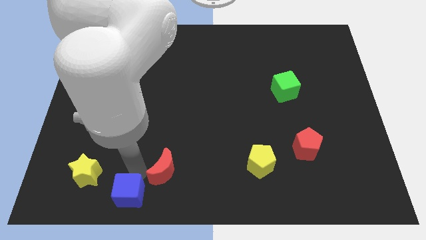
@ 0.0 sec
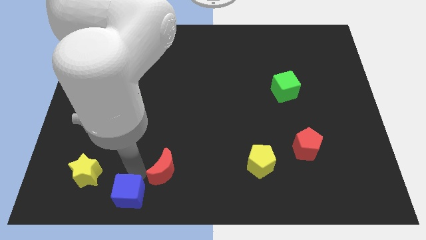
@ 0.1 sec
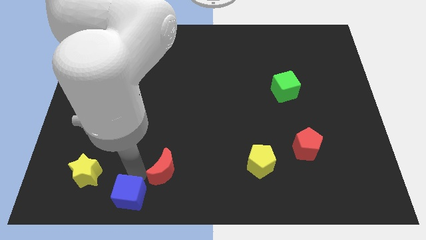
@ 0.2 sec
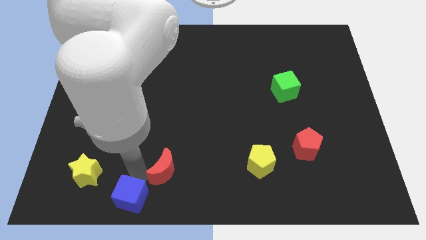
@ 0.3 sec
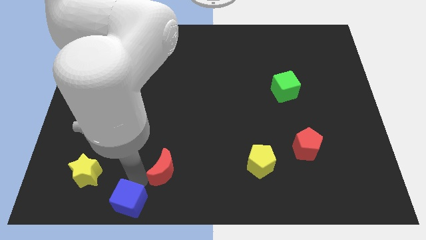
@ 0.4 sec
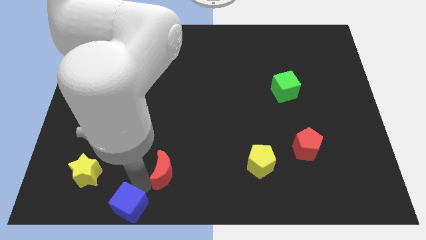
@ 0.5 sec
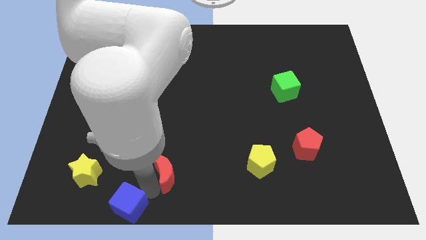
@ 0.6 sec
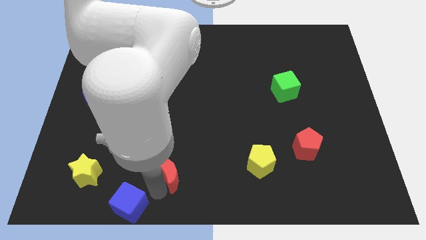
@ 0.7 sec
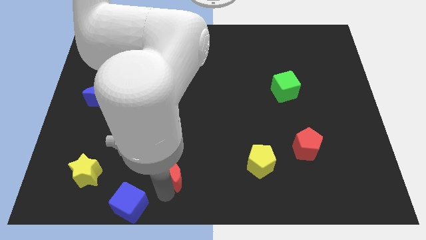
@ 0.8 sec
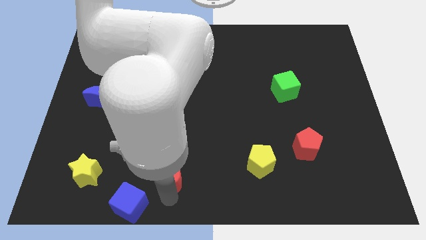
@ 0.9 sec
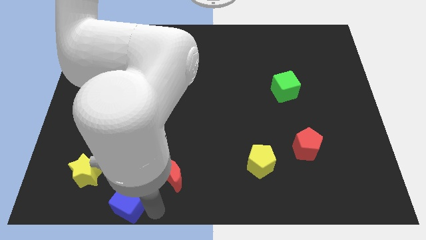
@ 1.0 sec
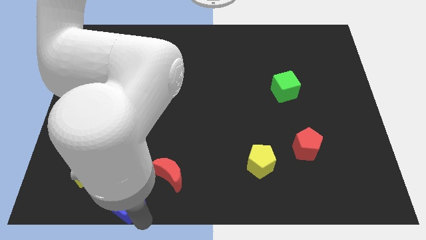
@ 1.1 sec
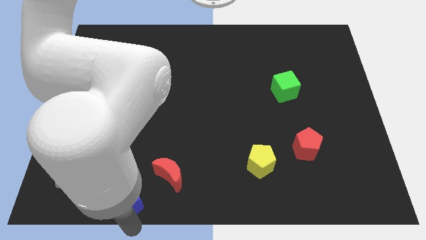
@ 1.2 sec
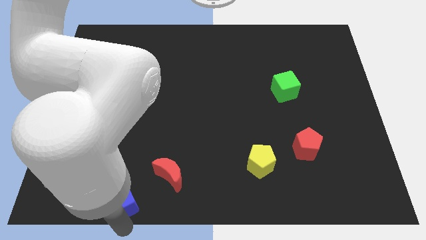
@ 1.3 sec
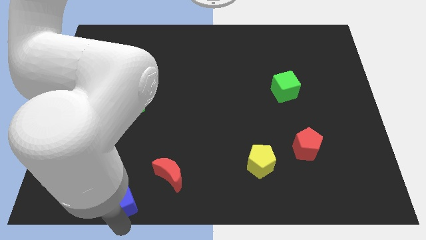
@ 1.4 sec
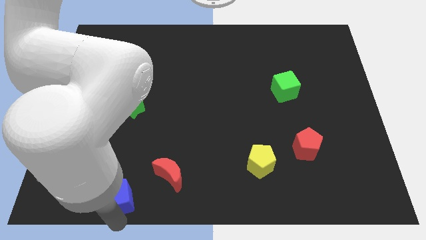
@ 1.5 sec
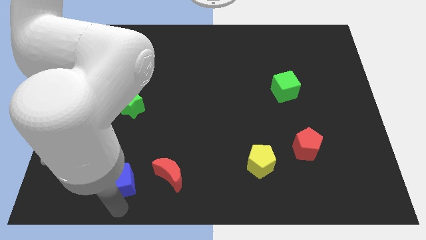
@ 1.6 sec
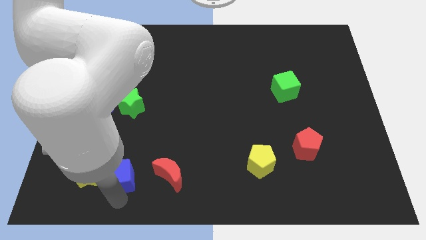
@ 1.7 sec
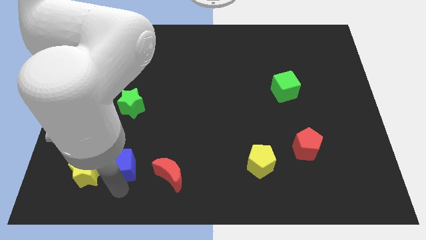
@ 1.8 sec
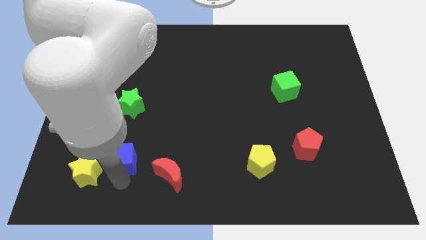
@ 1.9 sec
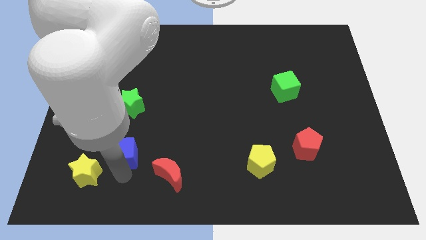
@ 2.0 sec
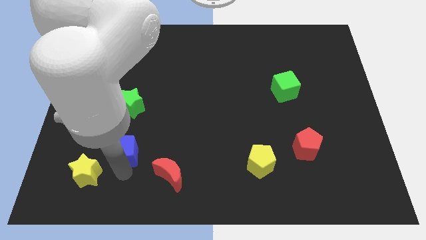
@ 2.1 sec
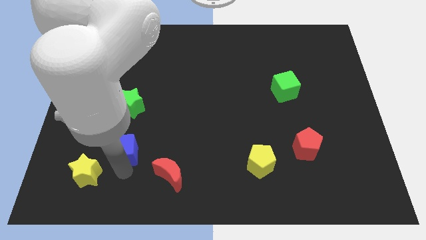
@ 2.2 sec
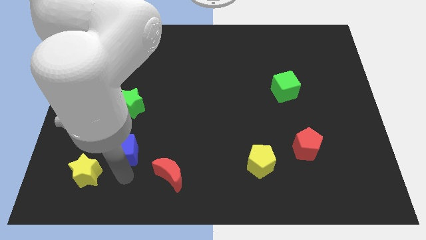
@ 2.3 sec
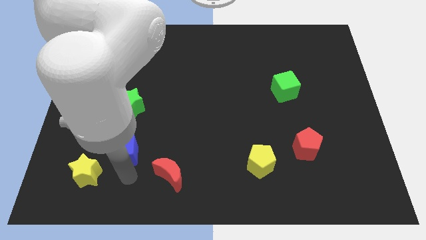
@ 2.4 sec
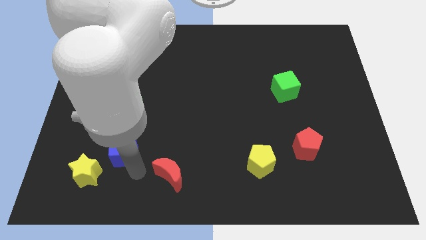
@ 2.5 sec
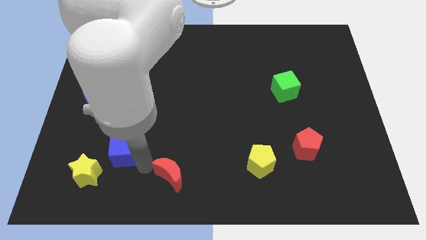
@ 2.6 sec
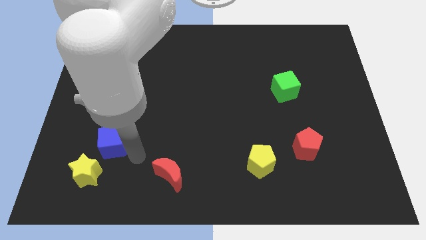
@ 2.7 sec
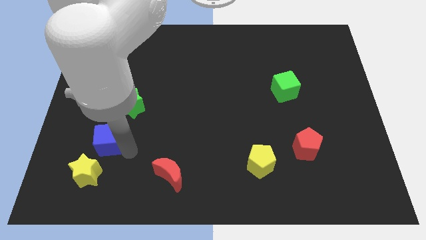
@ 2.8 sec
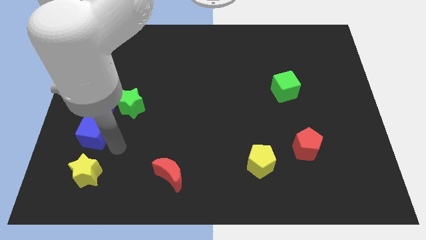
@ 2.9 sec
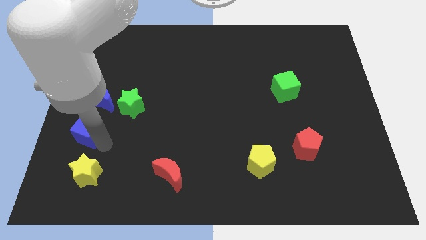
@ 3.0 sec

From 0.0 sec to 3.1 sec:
push blue cube above yellow star

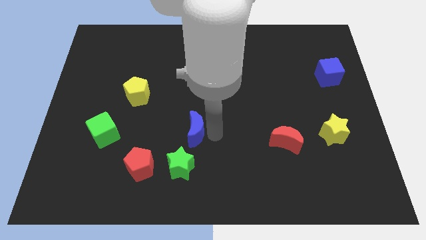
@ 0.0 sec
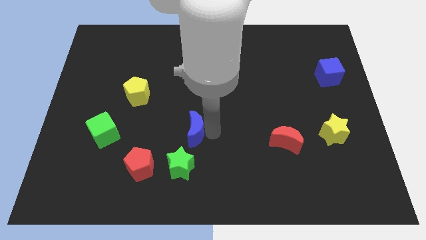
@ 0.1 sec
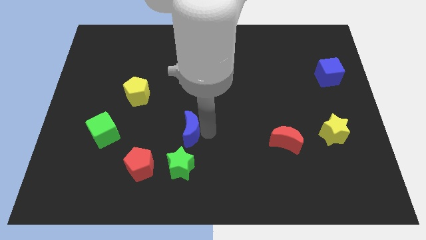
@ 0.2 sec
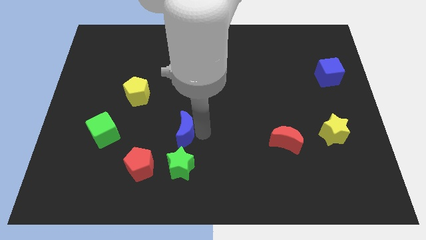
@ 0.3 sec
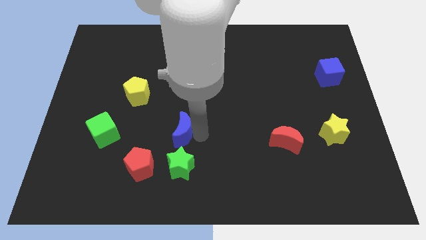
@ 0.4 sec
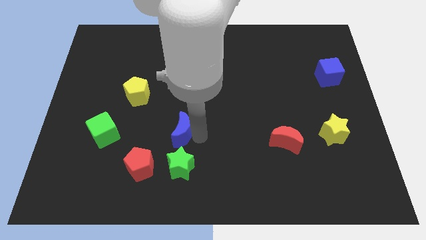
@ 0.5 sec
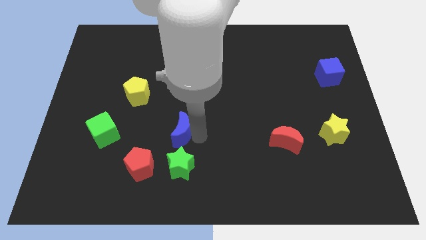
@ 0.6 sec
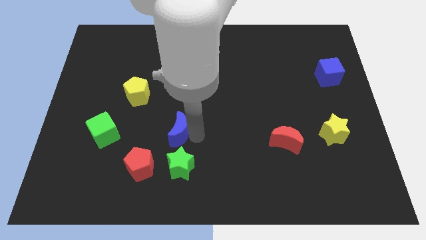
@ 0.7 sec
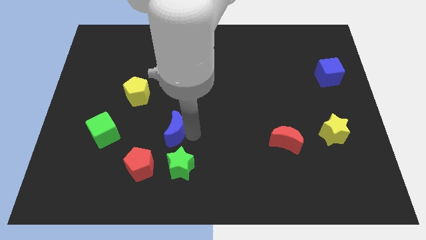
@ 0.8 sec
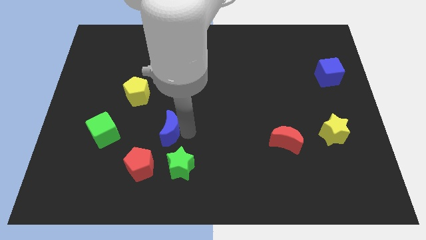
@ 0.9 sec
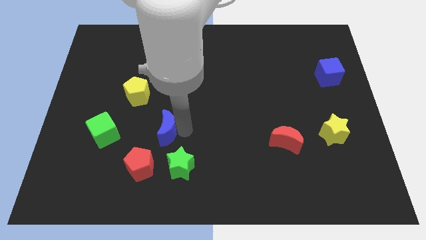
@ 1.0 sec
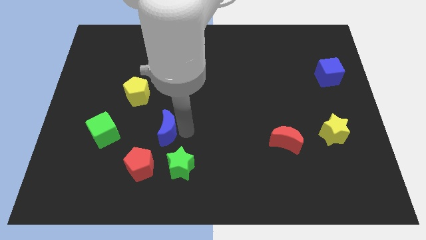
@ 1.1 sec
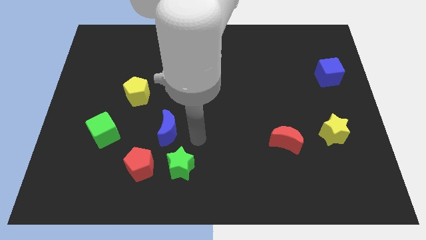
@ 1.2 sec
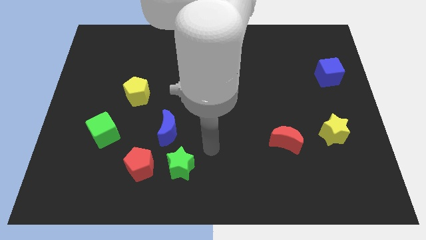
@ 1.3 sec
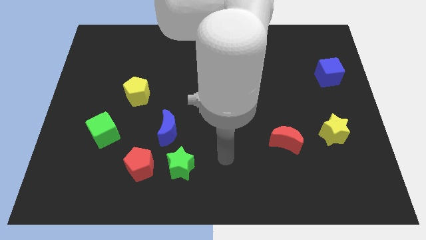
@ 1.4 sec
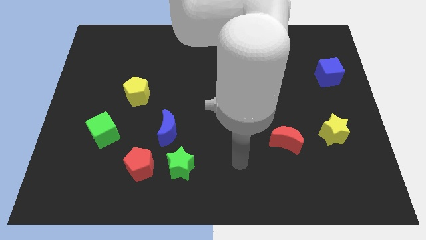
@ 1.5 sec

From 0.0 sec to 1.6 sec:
push the blue crescent to the left to form a triangle

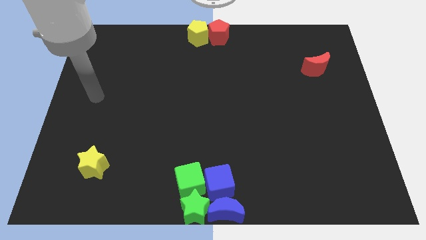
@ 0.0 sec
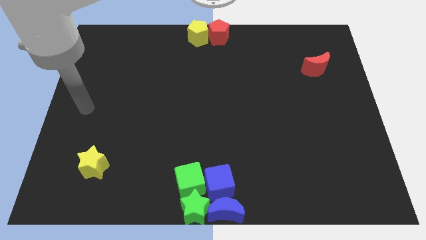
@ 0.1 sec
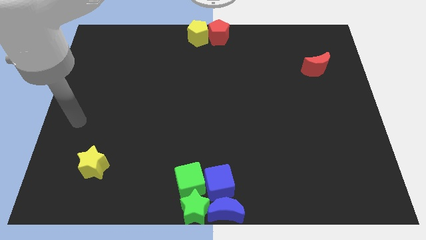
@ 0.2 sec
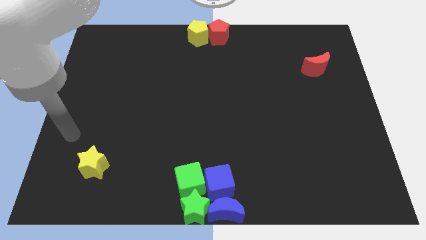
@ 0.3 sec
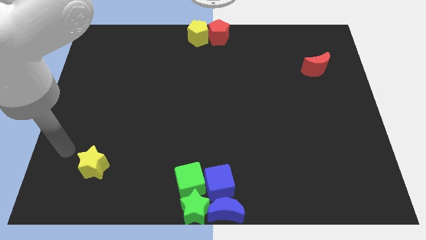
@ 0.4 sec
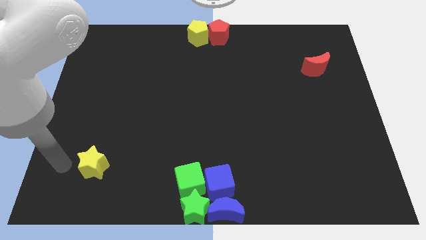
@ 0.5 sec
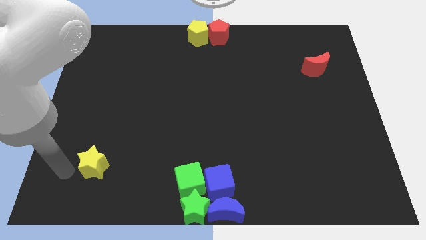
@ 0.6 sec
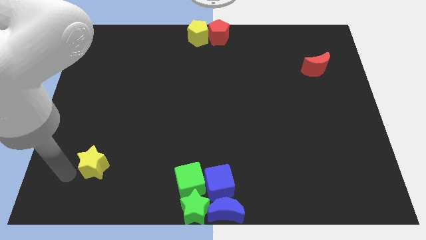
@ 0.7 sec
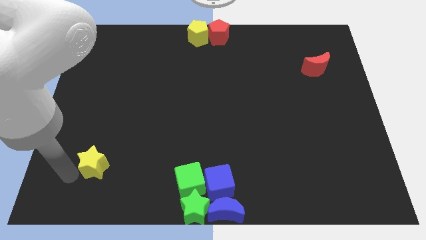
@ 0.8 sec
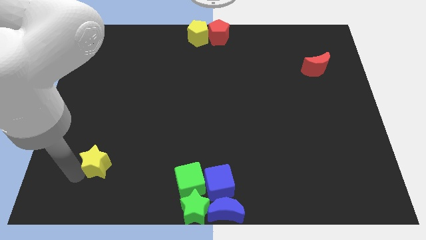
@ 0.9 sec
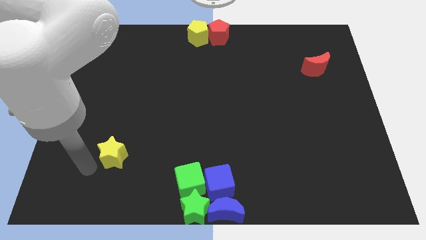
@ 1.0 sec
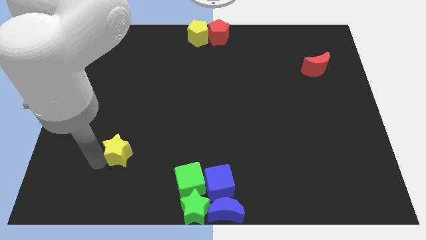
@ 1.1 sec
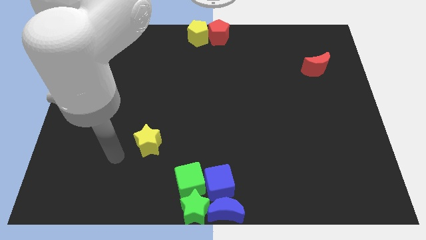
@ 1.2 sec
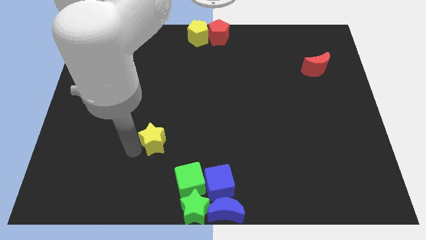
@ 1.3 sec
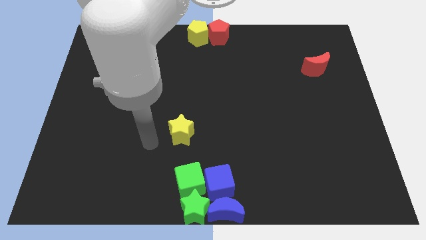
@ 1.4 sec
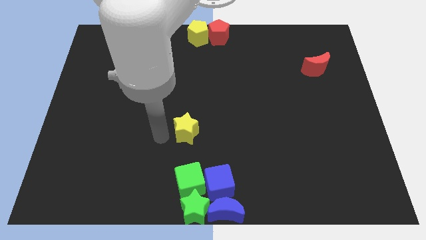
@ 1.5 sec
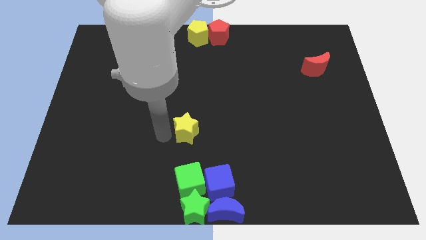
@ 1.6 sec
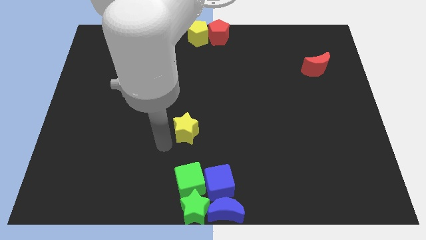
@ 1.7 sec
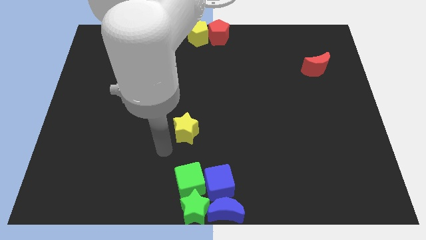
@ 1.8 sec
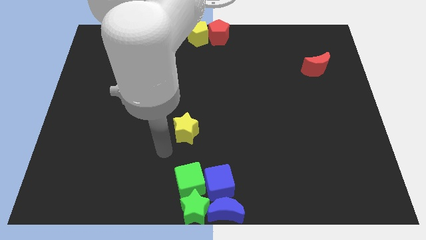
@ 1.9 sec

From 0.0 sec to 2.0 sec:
move the yellow star above the green blocks

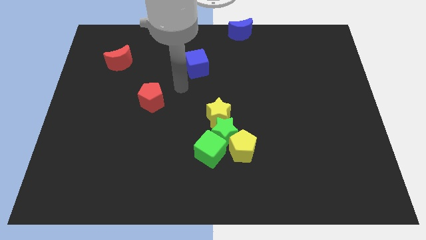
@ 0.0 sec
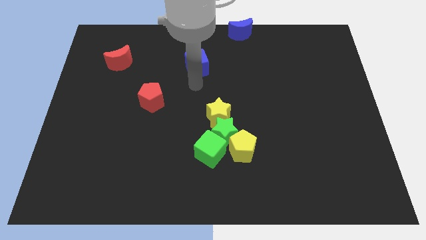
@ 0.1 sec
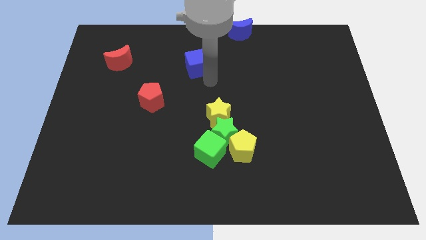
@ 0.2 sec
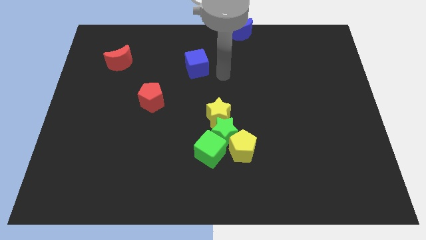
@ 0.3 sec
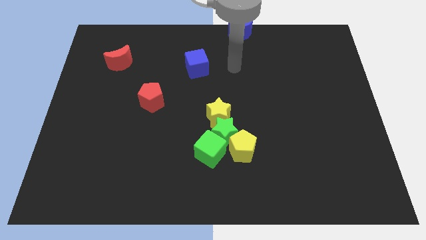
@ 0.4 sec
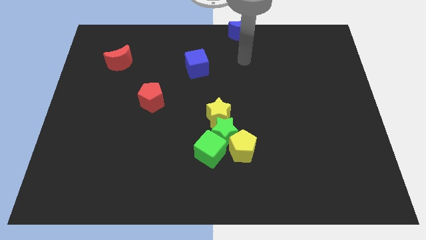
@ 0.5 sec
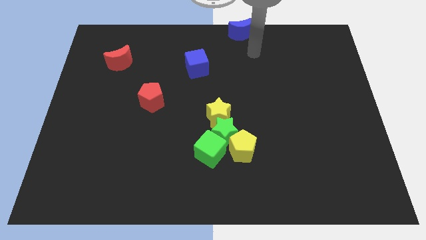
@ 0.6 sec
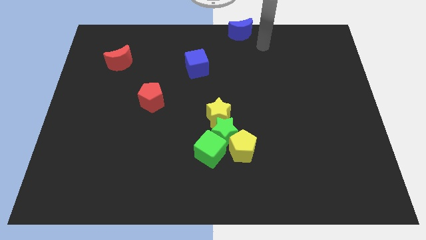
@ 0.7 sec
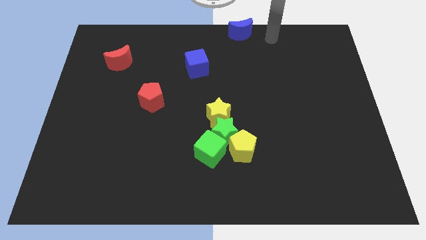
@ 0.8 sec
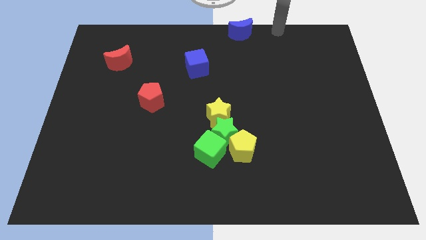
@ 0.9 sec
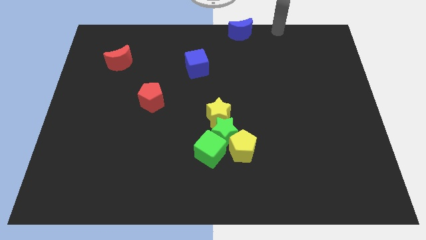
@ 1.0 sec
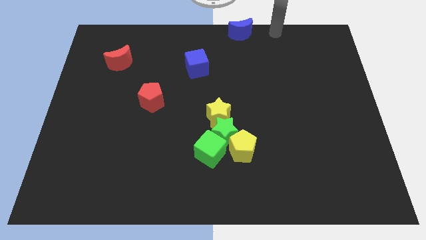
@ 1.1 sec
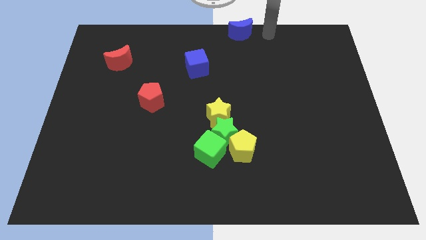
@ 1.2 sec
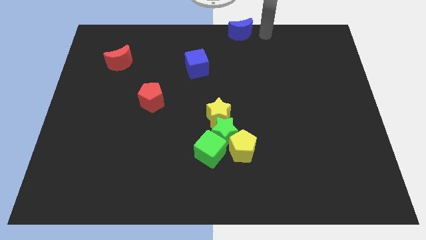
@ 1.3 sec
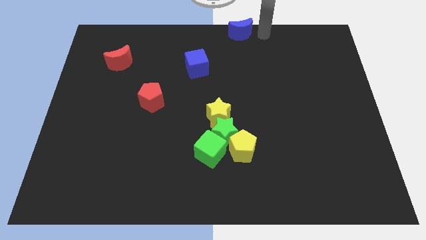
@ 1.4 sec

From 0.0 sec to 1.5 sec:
move your hand right to the blue crescent

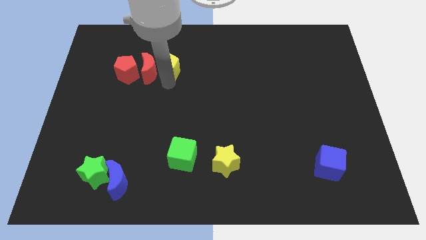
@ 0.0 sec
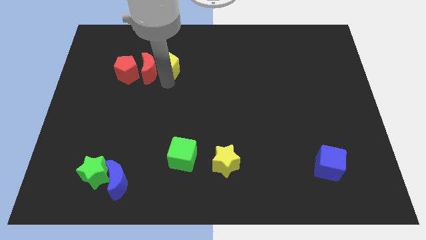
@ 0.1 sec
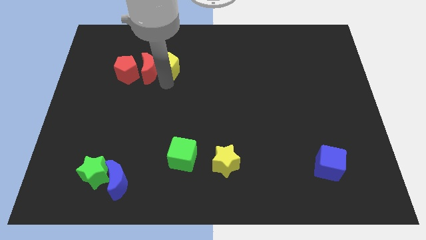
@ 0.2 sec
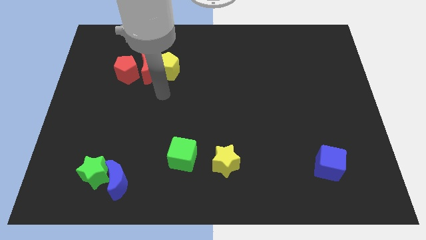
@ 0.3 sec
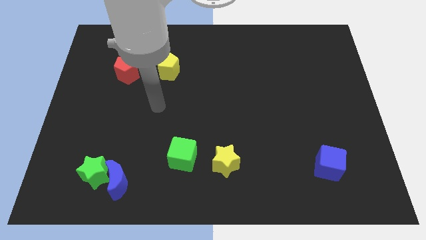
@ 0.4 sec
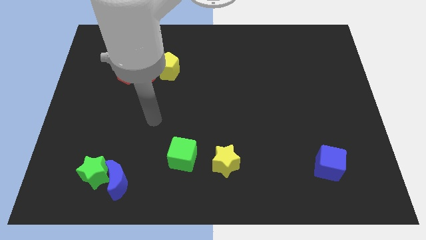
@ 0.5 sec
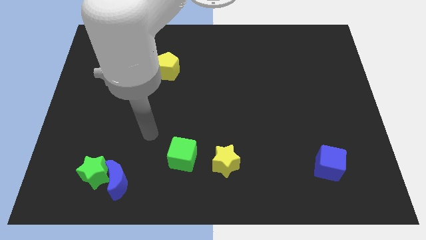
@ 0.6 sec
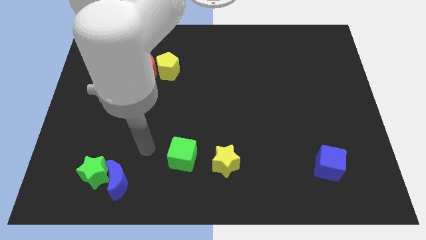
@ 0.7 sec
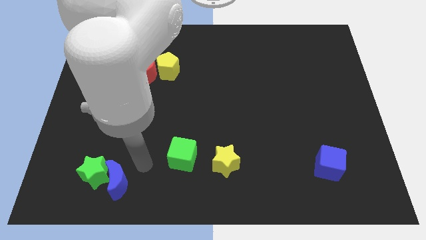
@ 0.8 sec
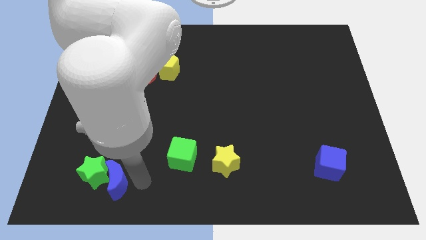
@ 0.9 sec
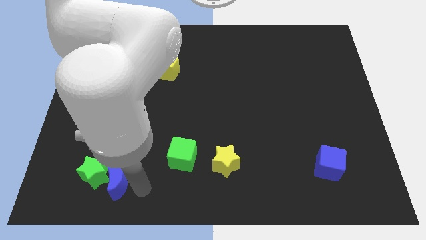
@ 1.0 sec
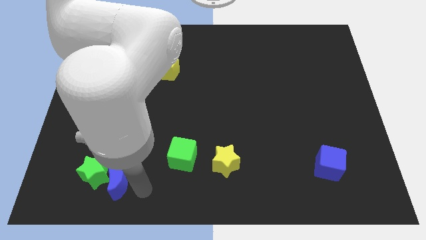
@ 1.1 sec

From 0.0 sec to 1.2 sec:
move your hand to the right of the blue crescent
